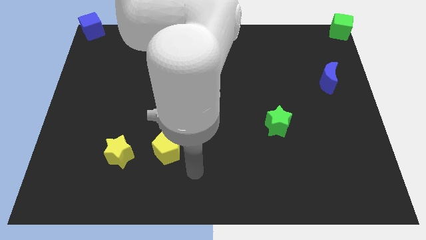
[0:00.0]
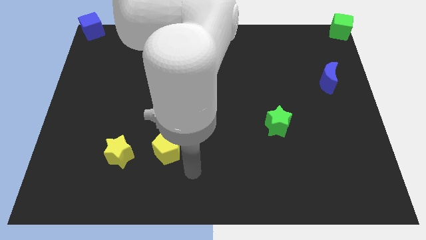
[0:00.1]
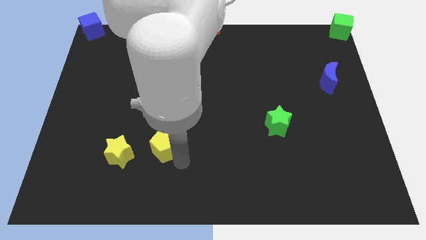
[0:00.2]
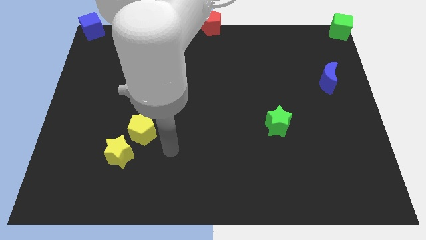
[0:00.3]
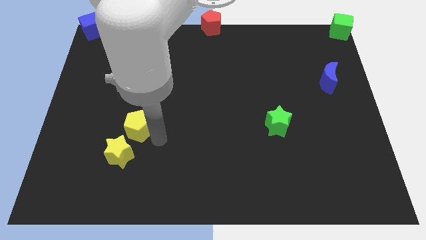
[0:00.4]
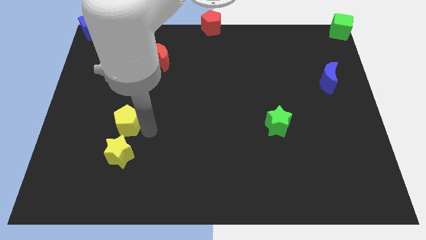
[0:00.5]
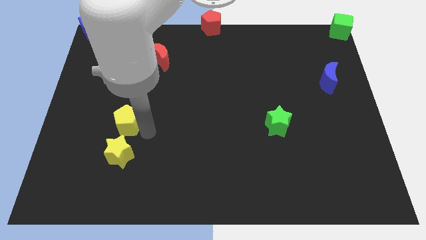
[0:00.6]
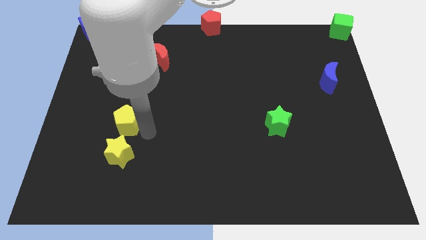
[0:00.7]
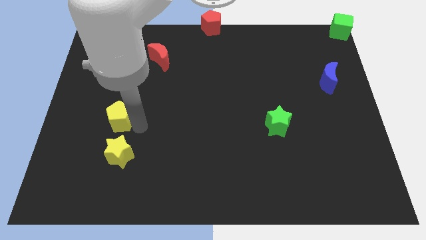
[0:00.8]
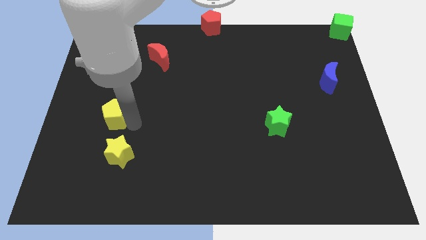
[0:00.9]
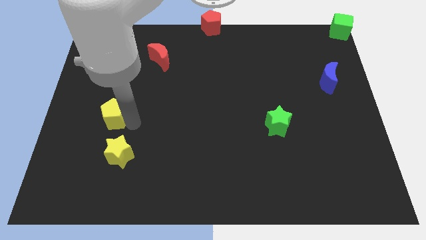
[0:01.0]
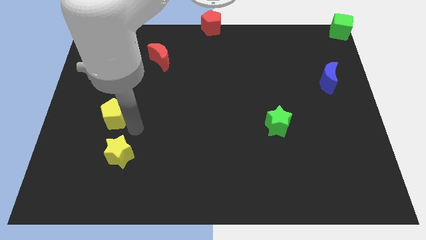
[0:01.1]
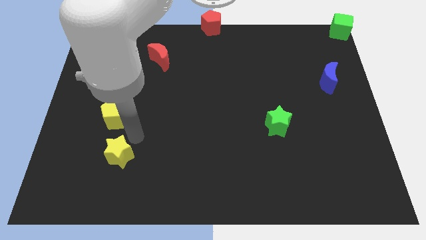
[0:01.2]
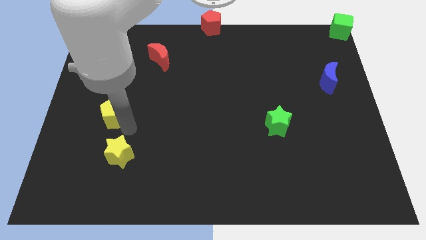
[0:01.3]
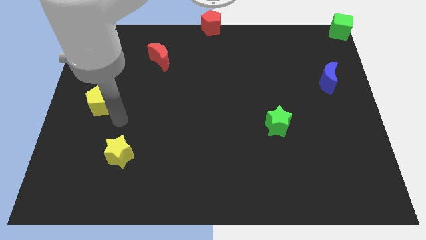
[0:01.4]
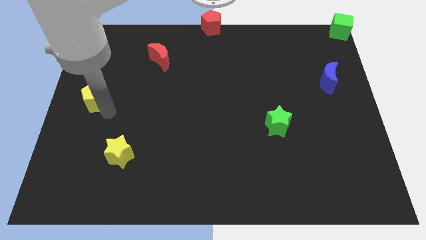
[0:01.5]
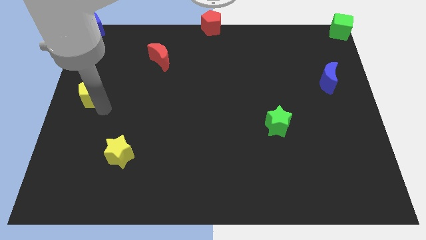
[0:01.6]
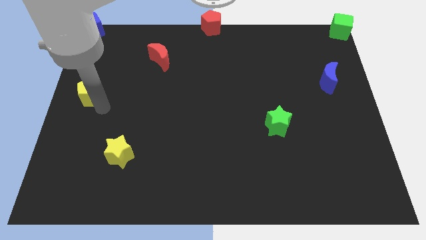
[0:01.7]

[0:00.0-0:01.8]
place the yellow penatgon diagonally to yellow star

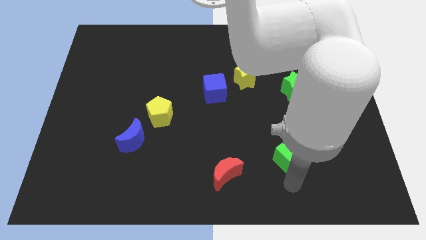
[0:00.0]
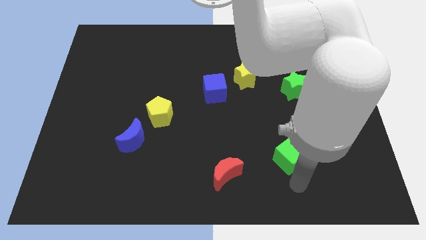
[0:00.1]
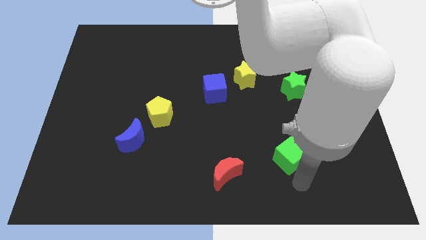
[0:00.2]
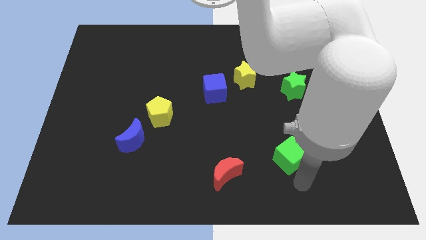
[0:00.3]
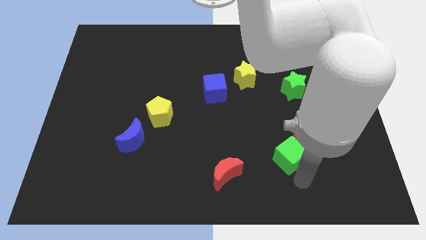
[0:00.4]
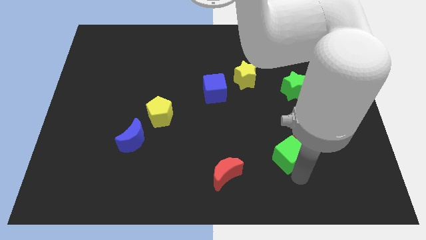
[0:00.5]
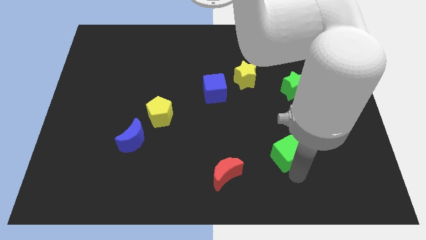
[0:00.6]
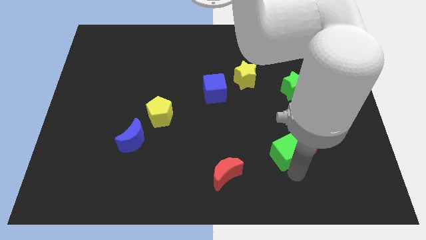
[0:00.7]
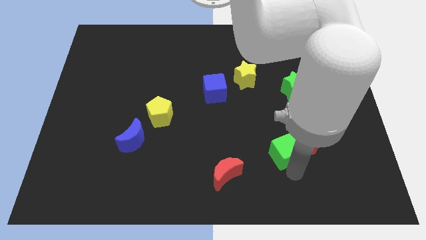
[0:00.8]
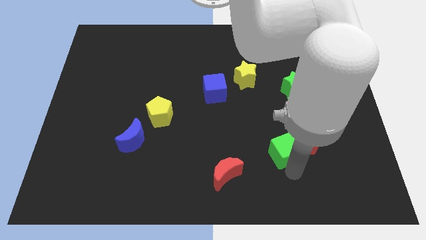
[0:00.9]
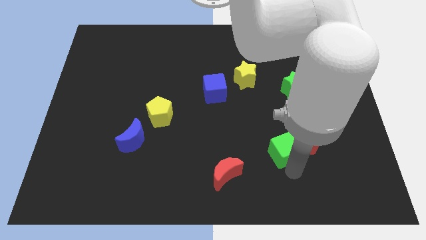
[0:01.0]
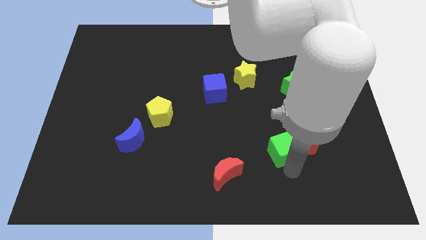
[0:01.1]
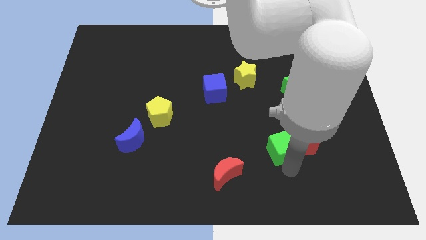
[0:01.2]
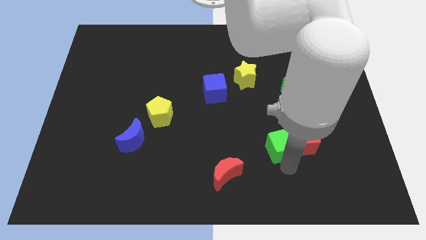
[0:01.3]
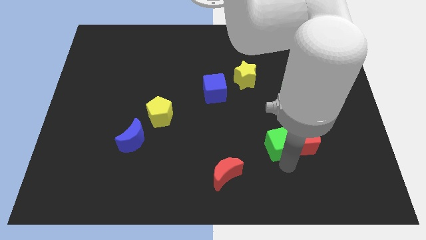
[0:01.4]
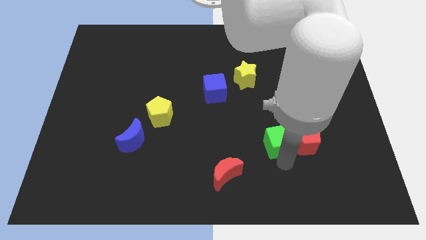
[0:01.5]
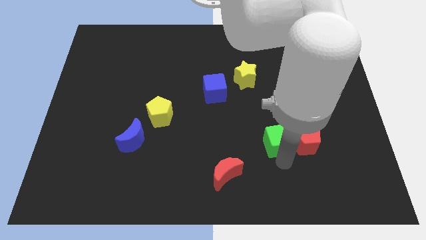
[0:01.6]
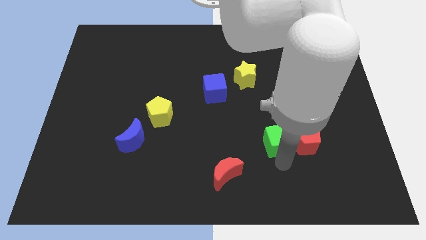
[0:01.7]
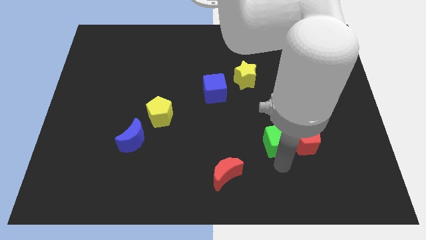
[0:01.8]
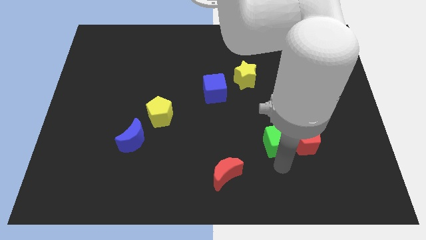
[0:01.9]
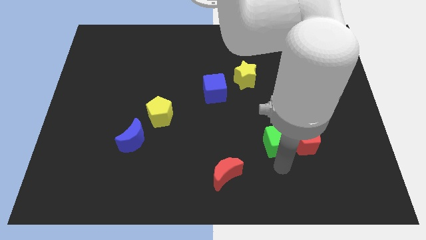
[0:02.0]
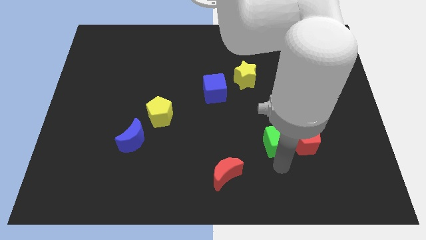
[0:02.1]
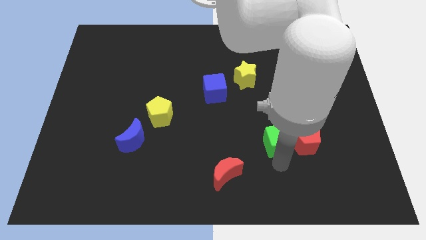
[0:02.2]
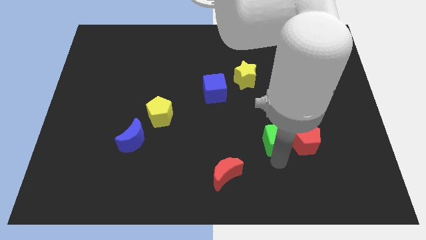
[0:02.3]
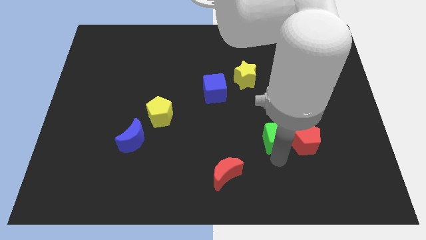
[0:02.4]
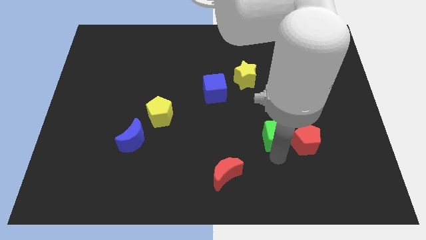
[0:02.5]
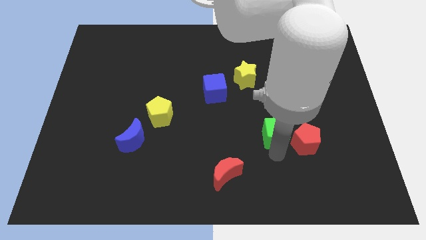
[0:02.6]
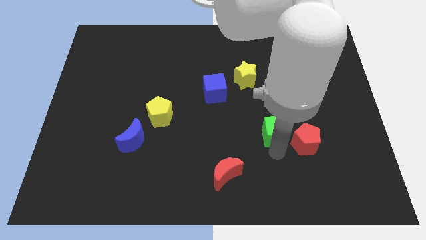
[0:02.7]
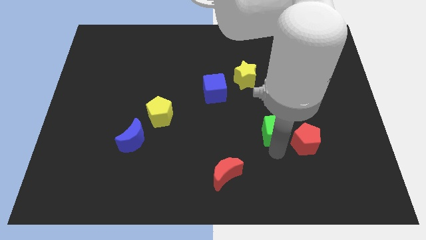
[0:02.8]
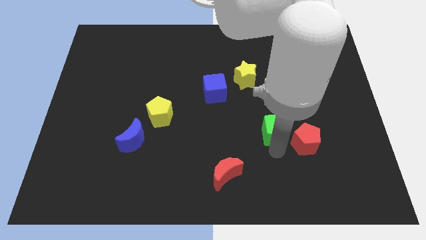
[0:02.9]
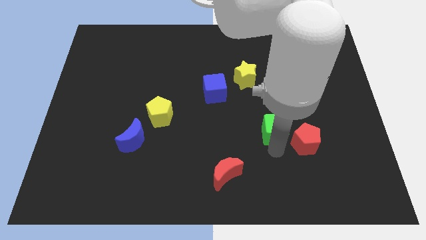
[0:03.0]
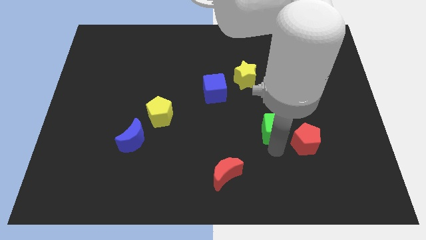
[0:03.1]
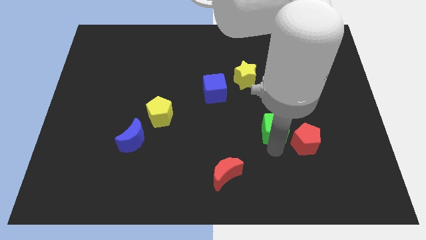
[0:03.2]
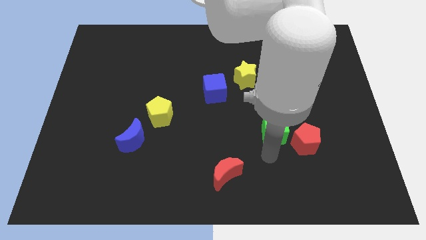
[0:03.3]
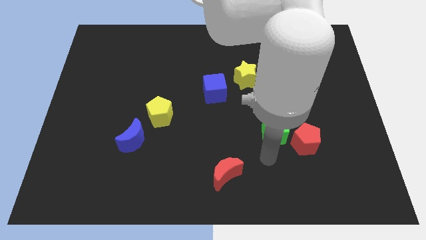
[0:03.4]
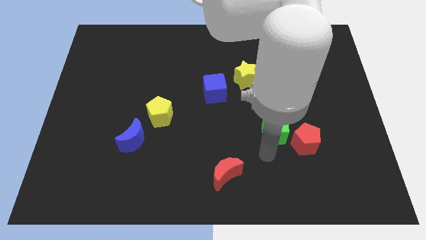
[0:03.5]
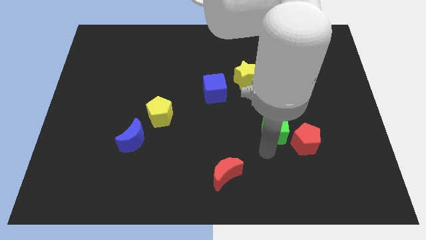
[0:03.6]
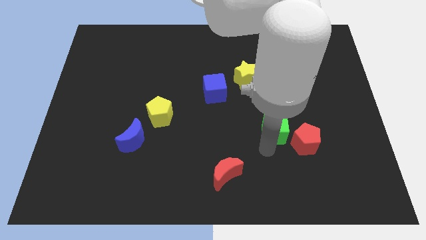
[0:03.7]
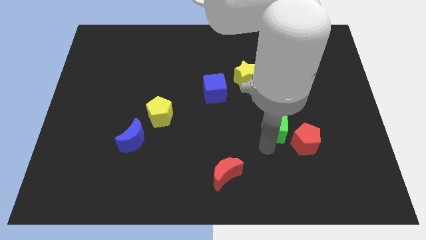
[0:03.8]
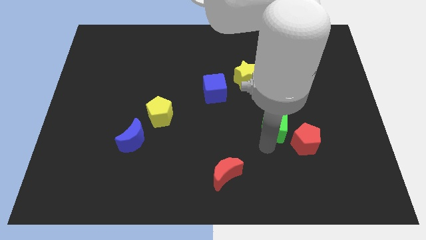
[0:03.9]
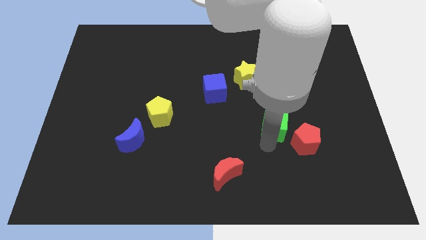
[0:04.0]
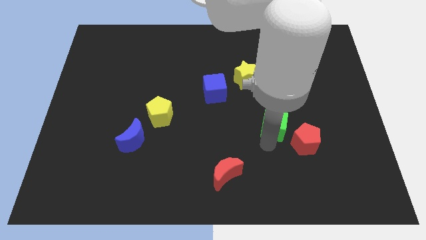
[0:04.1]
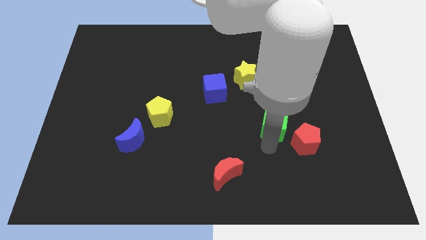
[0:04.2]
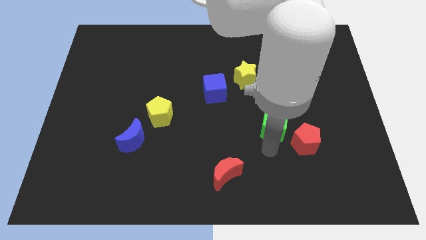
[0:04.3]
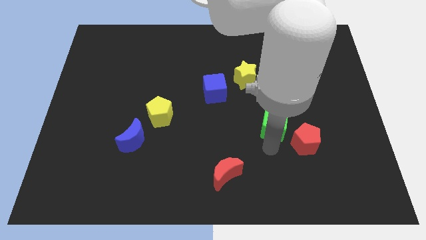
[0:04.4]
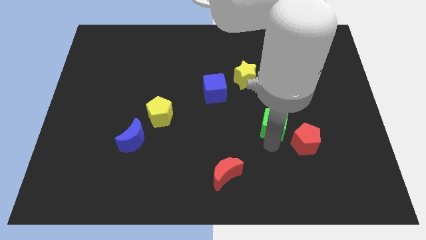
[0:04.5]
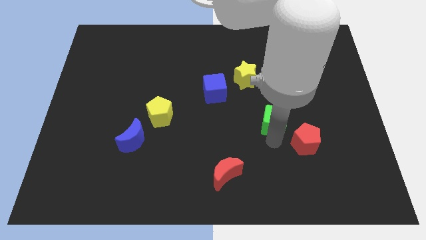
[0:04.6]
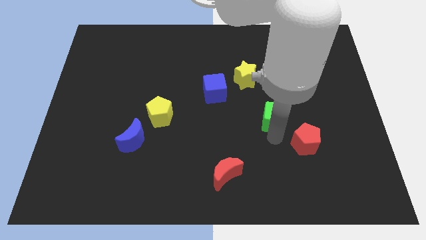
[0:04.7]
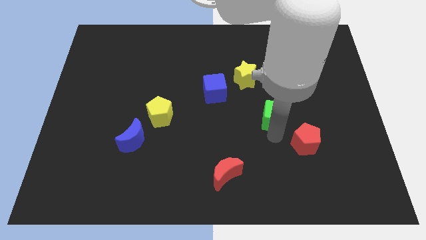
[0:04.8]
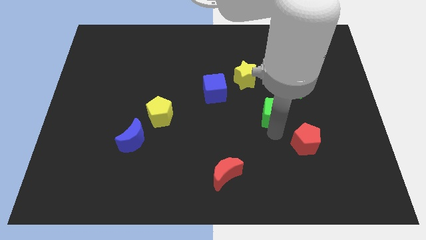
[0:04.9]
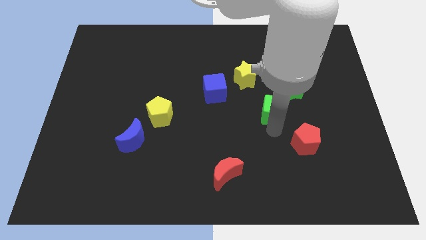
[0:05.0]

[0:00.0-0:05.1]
push green cube to top left of red pentagon

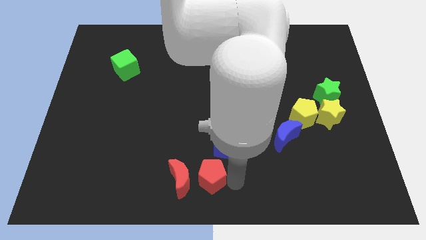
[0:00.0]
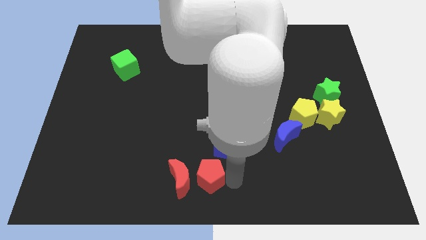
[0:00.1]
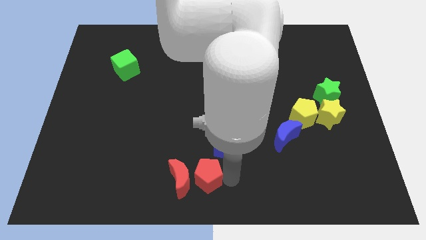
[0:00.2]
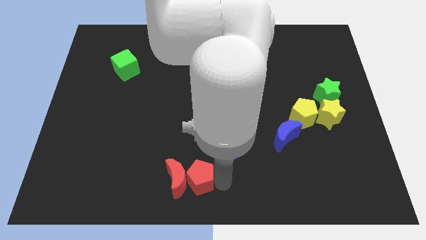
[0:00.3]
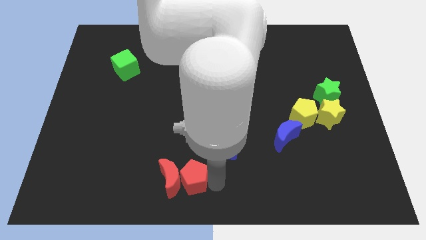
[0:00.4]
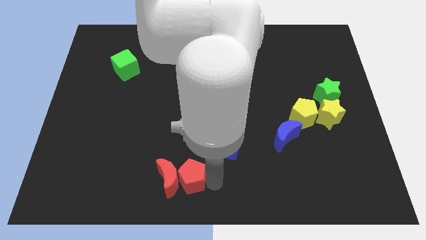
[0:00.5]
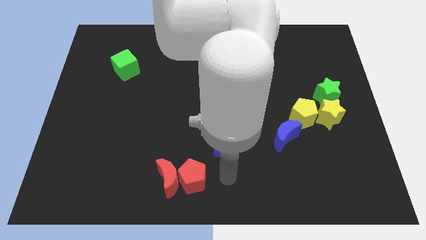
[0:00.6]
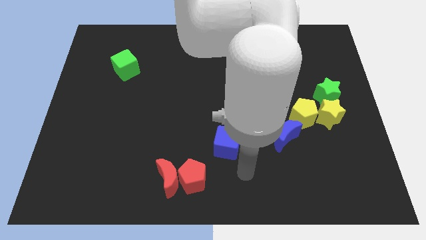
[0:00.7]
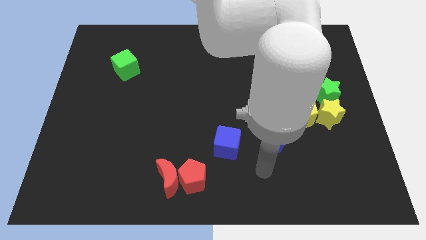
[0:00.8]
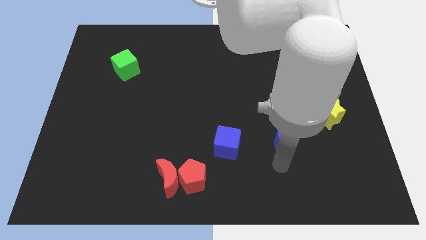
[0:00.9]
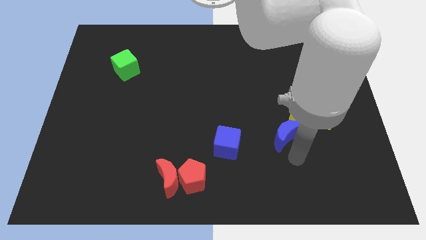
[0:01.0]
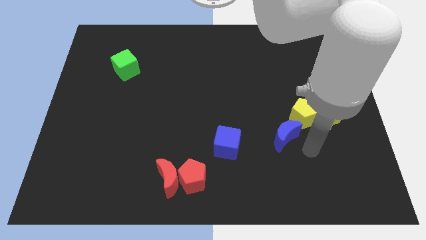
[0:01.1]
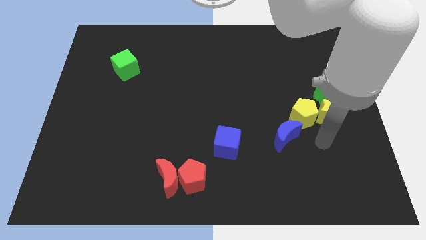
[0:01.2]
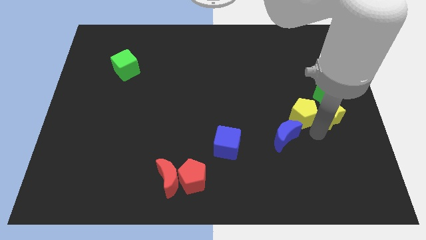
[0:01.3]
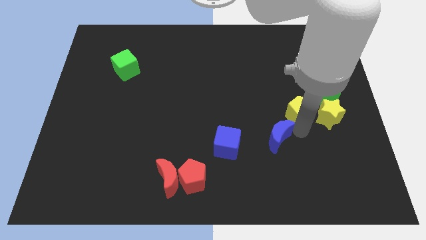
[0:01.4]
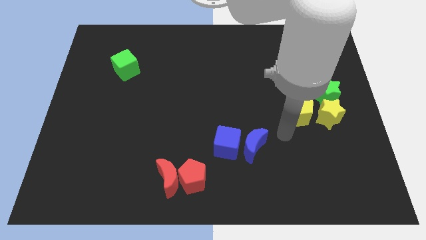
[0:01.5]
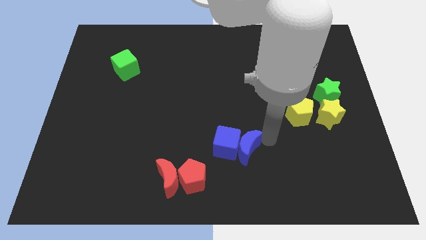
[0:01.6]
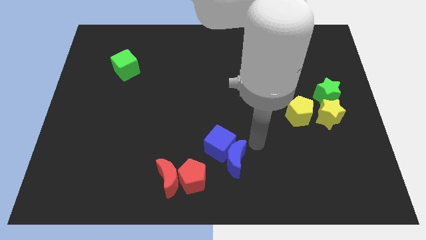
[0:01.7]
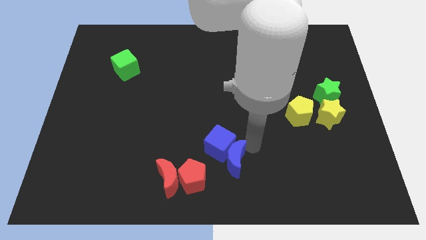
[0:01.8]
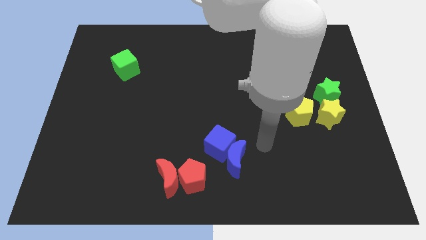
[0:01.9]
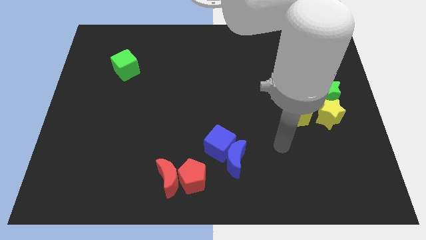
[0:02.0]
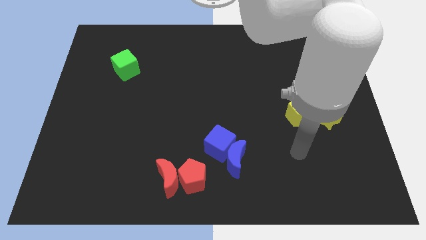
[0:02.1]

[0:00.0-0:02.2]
move the blue moon into a blue cube
